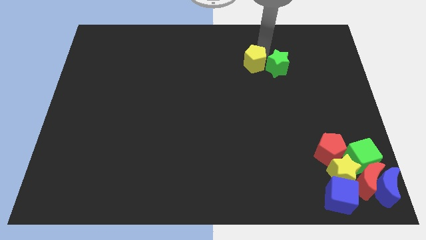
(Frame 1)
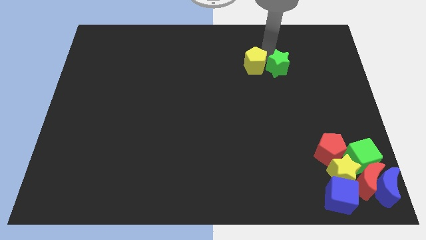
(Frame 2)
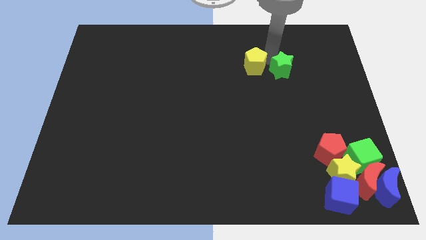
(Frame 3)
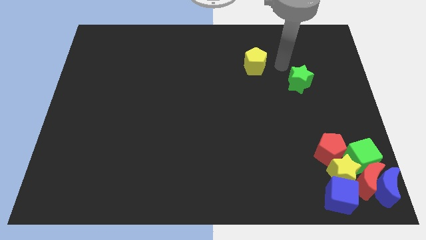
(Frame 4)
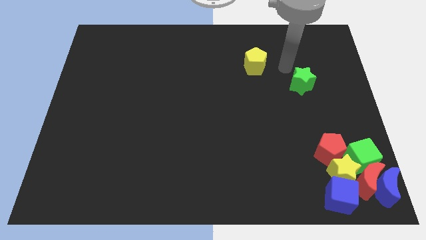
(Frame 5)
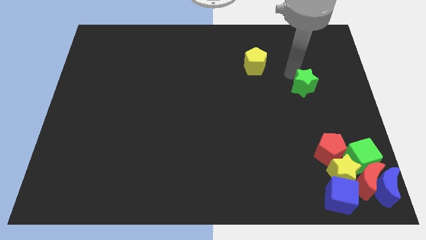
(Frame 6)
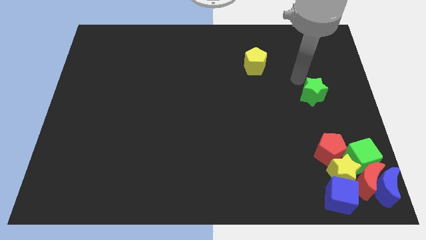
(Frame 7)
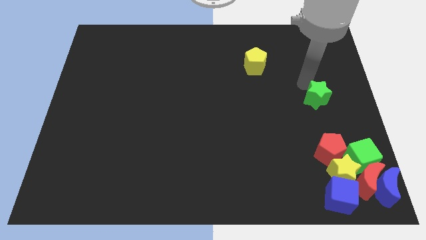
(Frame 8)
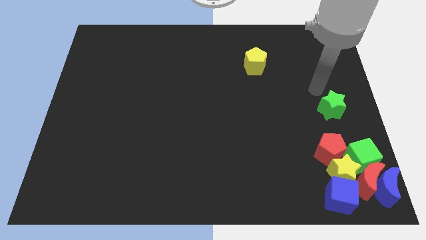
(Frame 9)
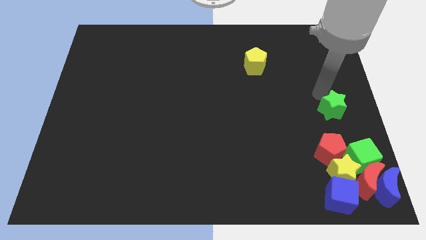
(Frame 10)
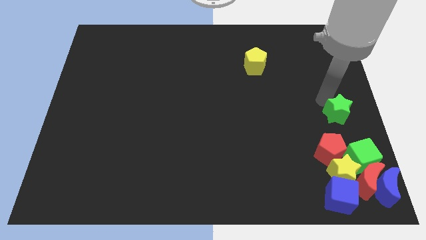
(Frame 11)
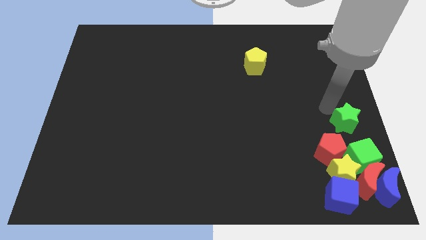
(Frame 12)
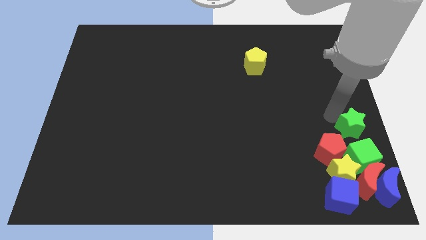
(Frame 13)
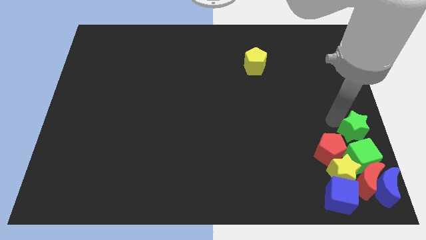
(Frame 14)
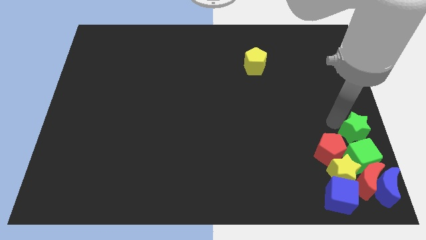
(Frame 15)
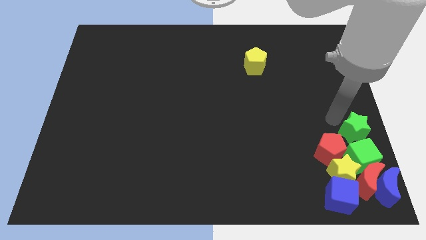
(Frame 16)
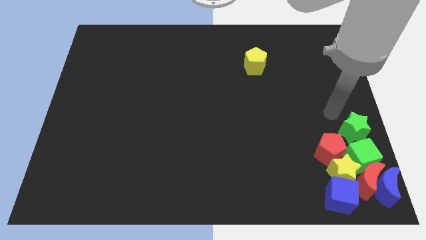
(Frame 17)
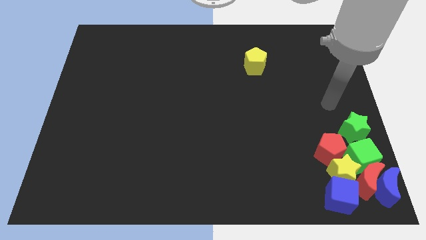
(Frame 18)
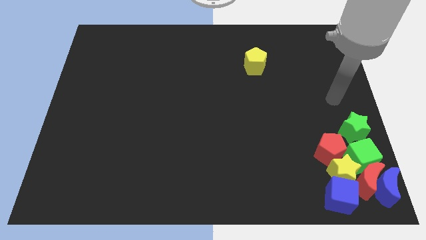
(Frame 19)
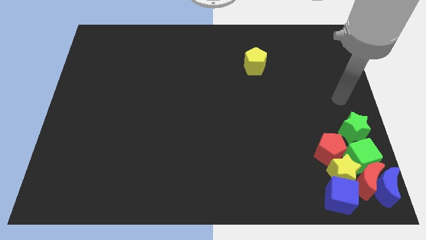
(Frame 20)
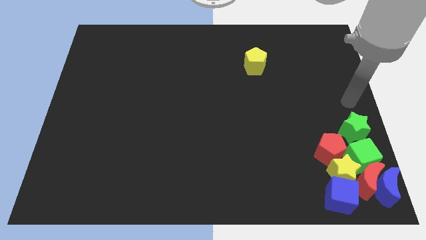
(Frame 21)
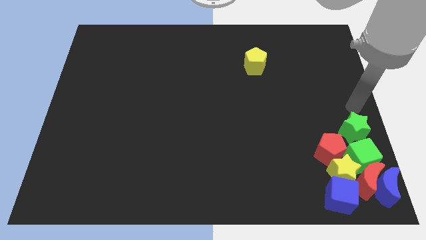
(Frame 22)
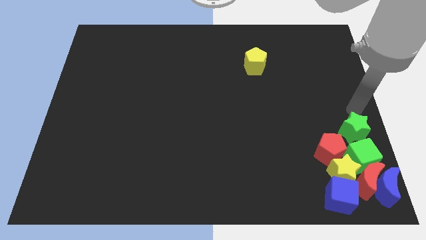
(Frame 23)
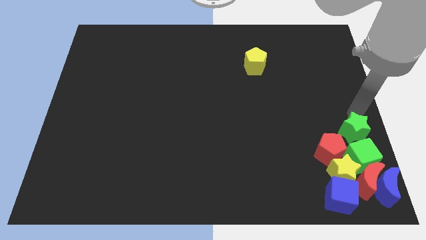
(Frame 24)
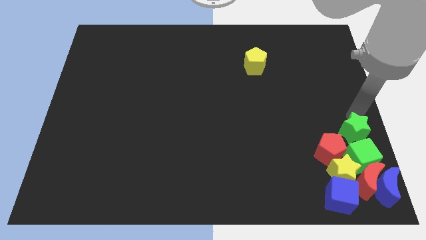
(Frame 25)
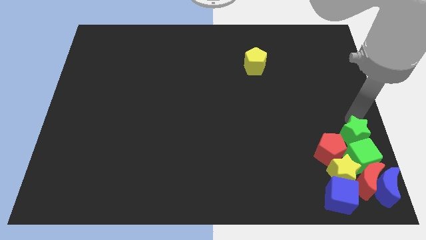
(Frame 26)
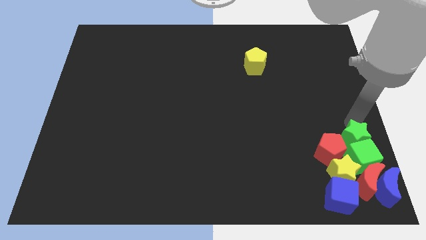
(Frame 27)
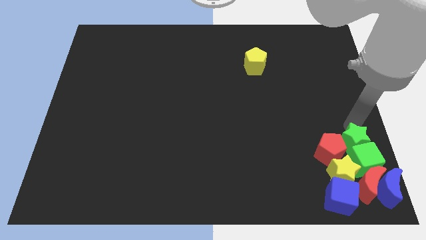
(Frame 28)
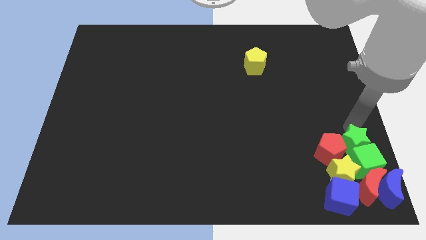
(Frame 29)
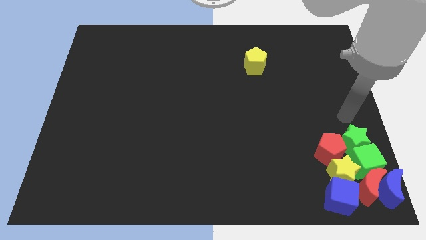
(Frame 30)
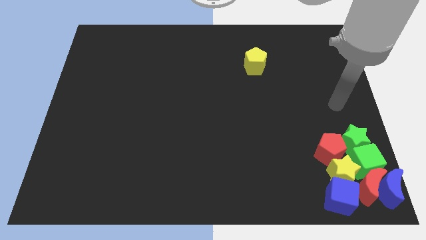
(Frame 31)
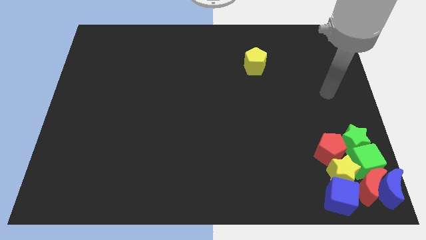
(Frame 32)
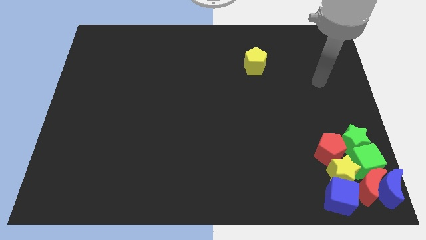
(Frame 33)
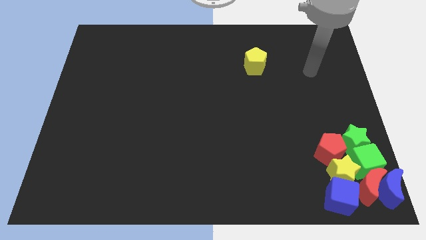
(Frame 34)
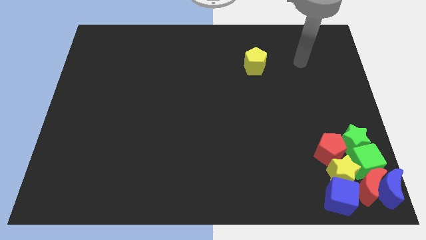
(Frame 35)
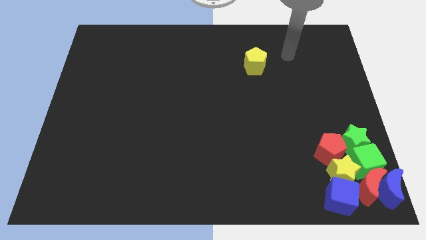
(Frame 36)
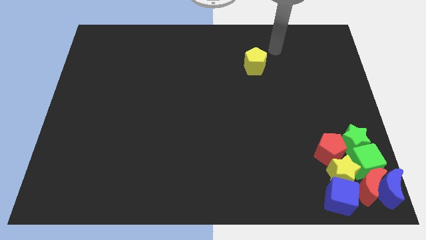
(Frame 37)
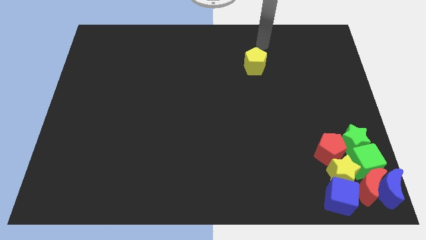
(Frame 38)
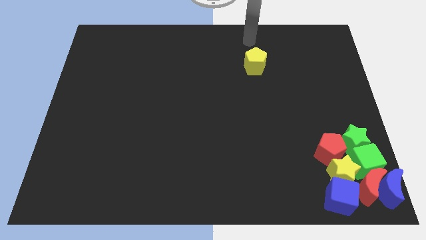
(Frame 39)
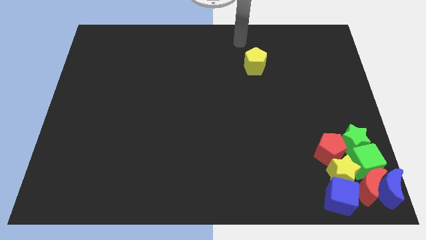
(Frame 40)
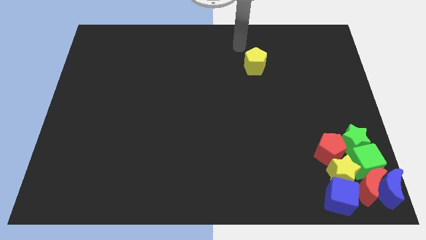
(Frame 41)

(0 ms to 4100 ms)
add green star above green cube

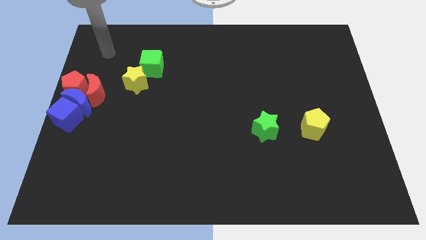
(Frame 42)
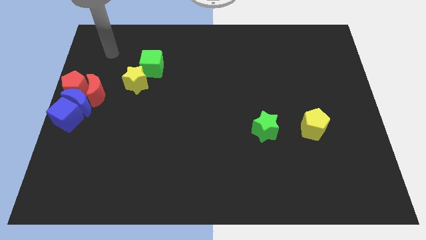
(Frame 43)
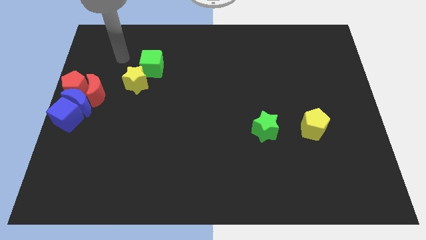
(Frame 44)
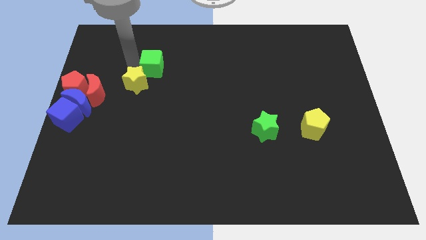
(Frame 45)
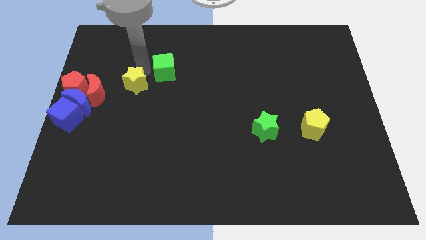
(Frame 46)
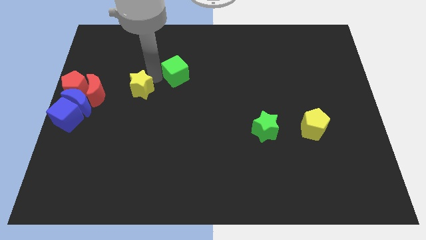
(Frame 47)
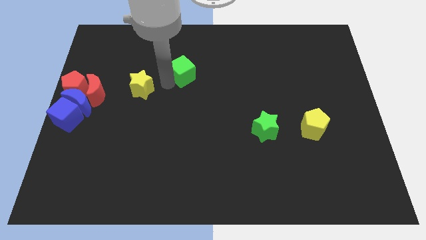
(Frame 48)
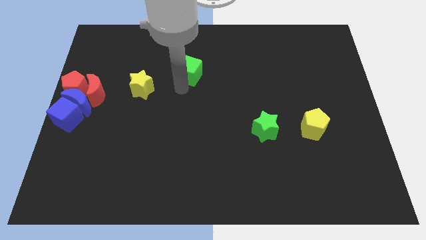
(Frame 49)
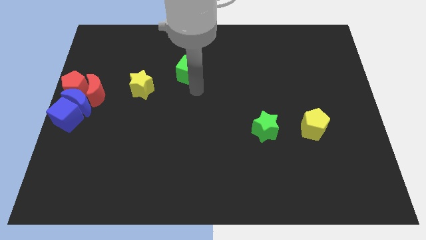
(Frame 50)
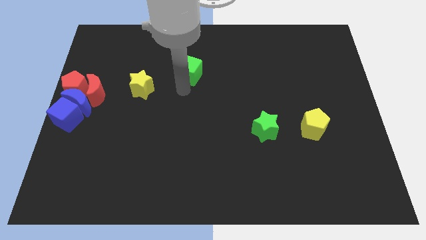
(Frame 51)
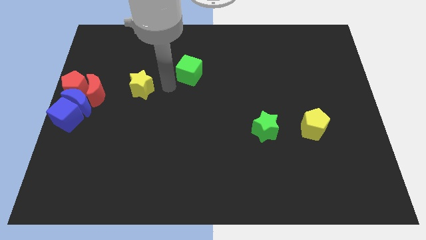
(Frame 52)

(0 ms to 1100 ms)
separate green cube and yellow star

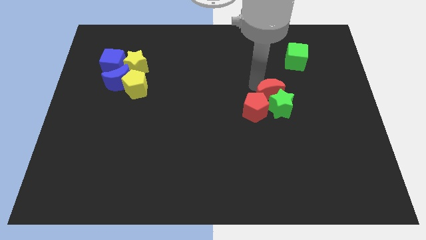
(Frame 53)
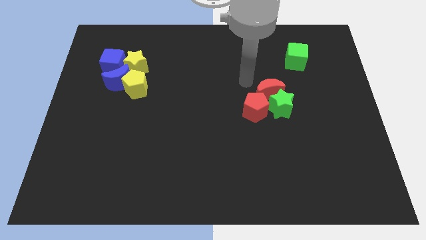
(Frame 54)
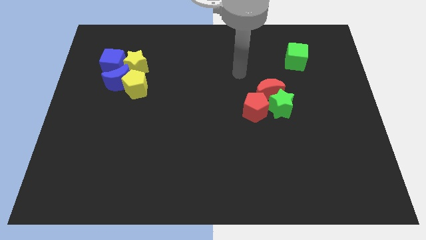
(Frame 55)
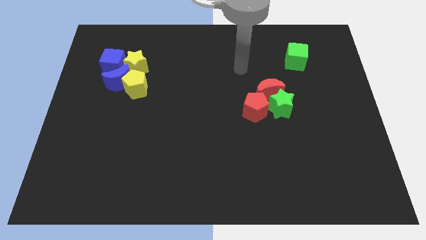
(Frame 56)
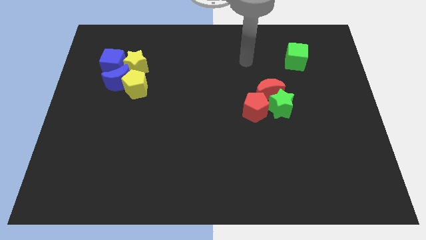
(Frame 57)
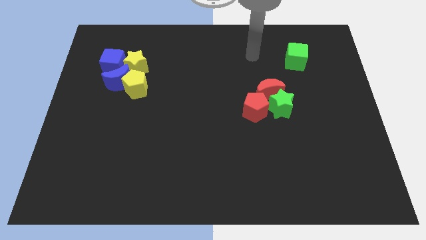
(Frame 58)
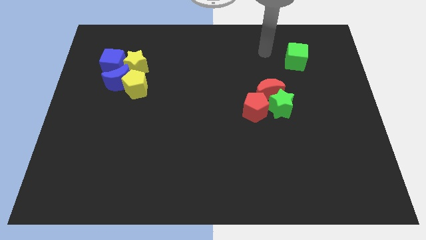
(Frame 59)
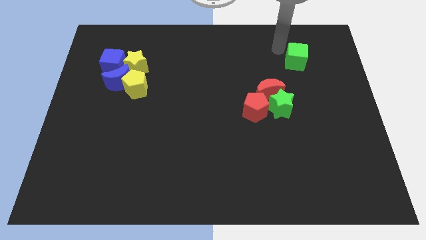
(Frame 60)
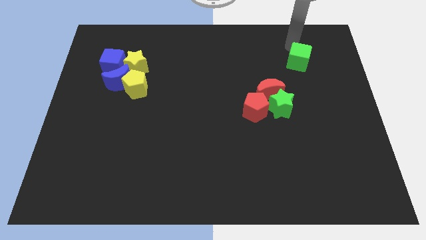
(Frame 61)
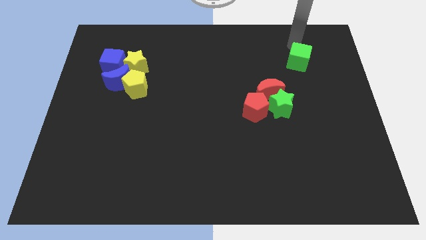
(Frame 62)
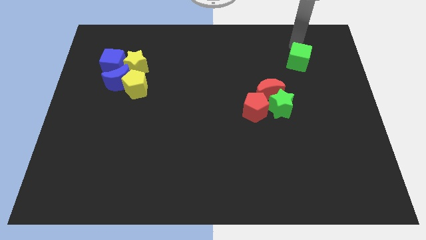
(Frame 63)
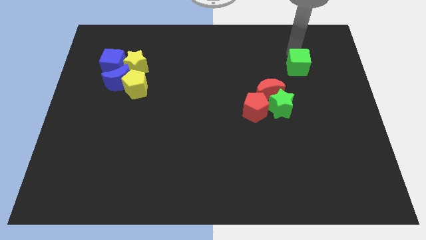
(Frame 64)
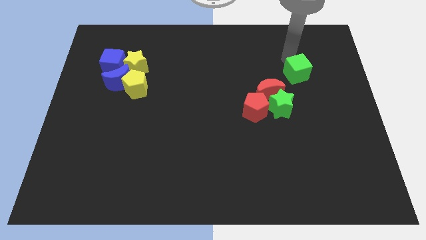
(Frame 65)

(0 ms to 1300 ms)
slightly push the green cube towards the red crescent

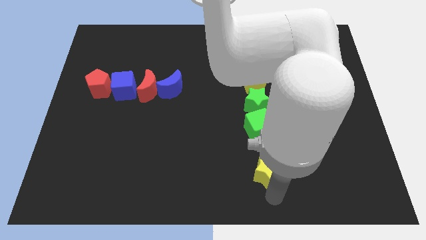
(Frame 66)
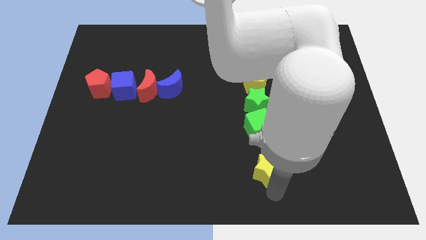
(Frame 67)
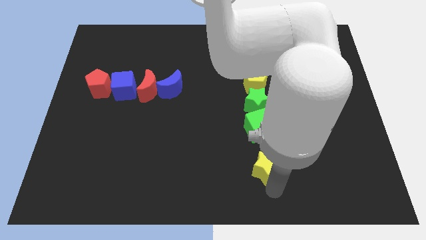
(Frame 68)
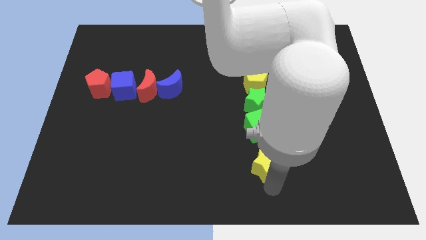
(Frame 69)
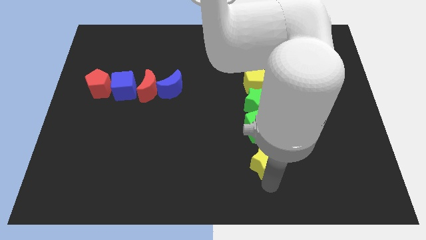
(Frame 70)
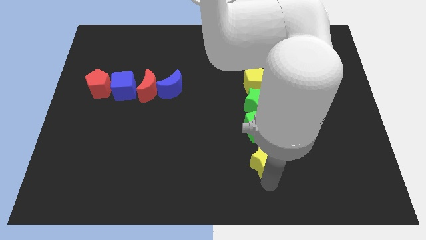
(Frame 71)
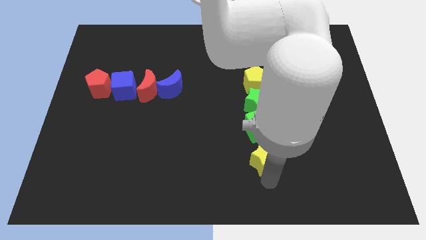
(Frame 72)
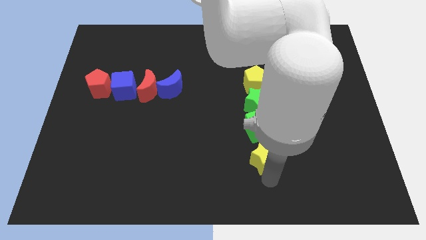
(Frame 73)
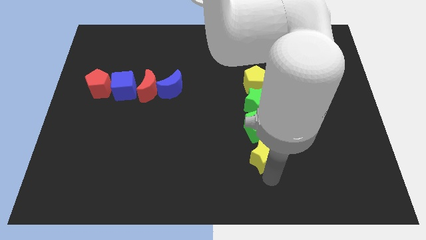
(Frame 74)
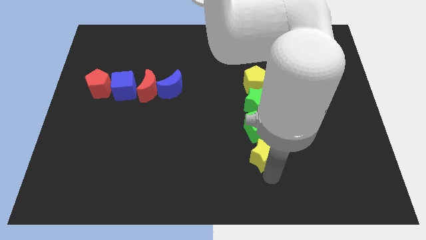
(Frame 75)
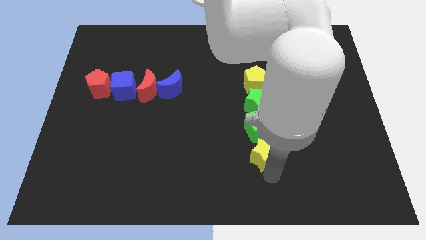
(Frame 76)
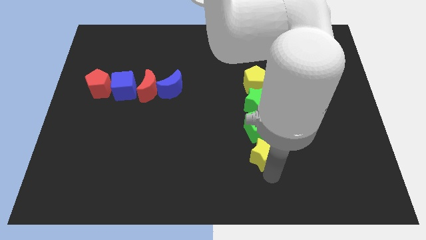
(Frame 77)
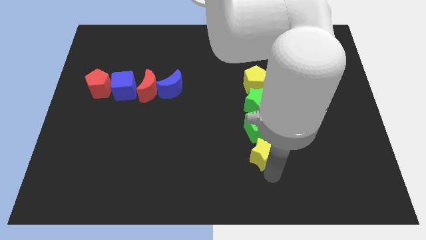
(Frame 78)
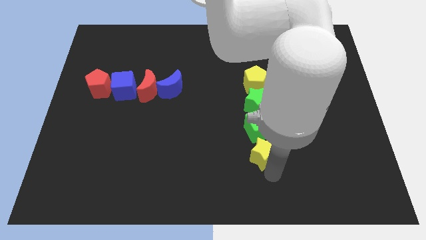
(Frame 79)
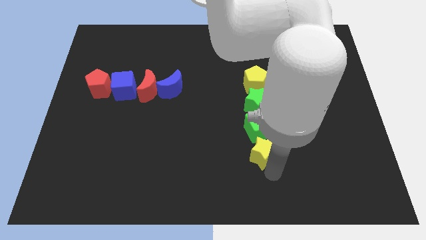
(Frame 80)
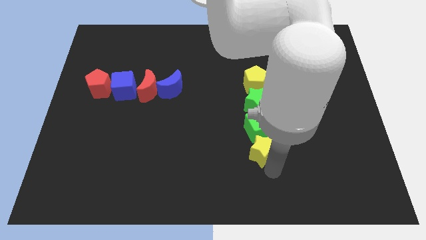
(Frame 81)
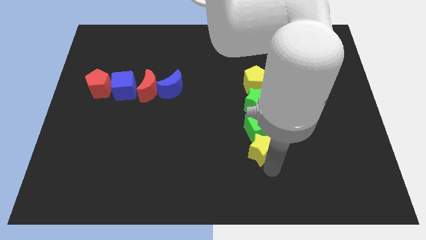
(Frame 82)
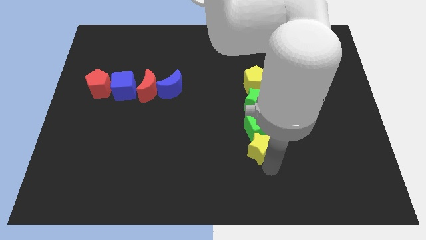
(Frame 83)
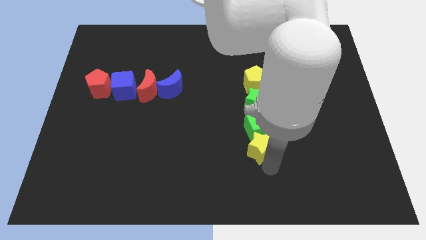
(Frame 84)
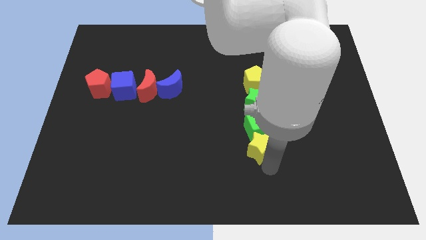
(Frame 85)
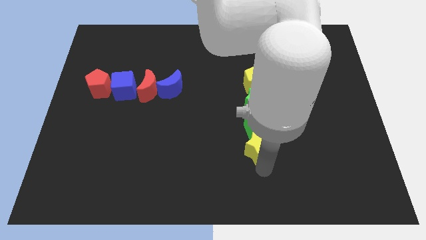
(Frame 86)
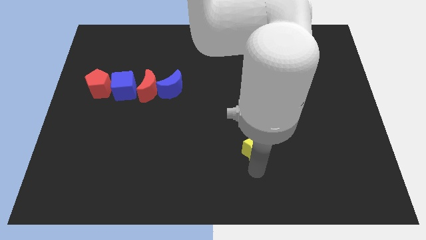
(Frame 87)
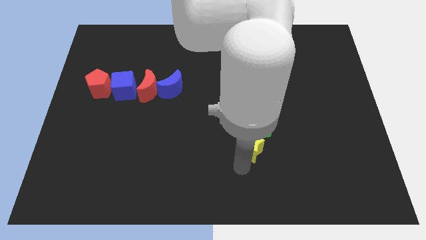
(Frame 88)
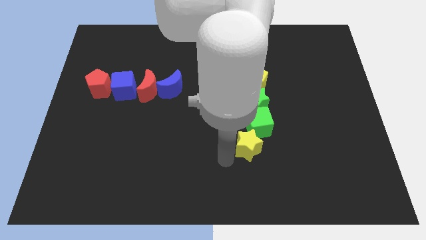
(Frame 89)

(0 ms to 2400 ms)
put the yellow star at the bottom left of the green cube

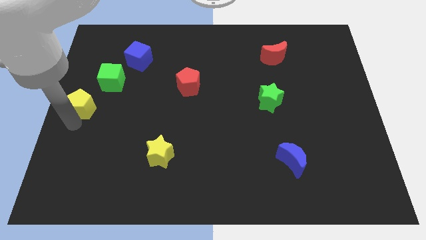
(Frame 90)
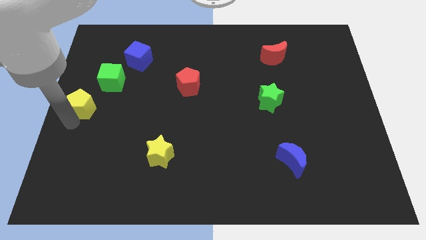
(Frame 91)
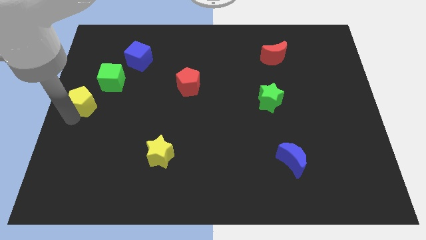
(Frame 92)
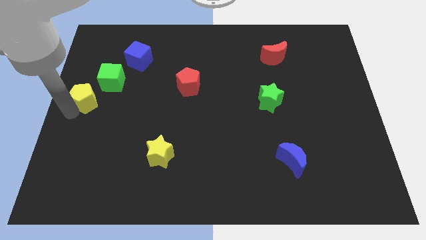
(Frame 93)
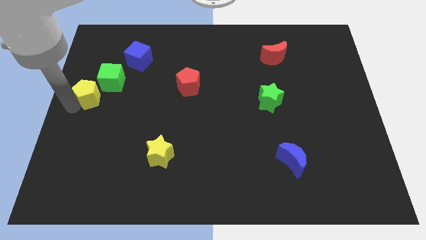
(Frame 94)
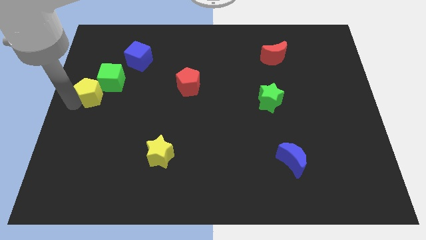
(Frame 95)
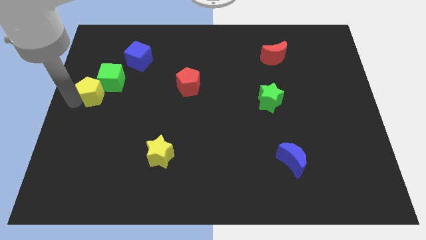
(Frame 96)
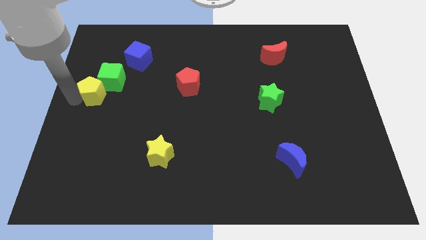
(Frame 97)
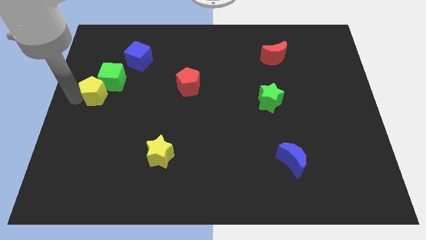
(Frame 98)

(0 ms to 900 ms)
place the yellow pentagon at the bottom left side of green cube
